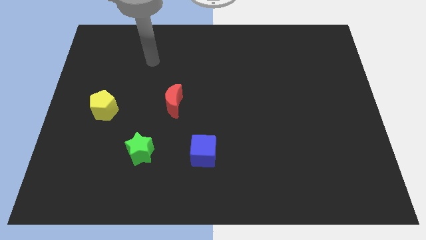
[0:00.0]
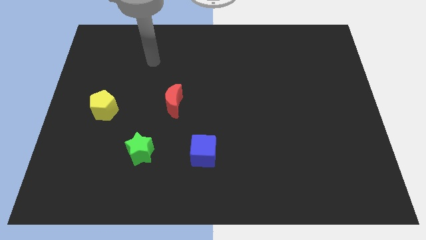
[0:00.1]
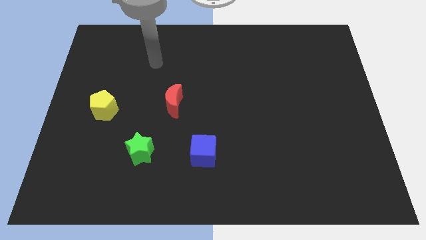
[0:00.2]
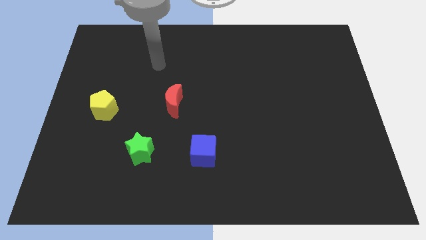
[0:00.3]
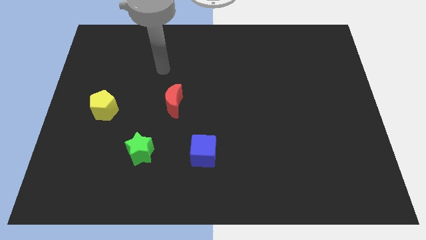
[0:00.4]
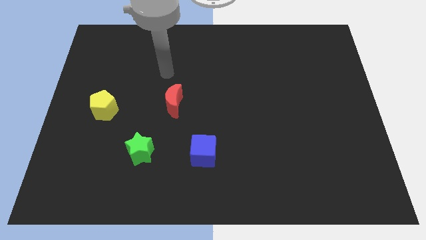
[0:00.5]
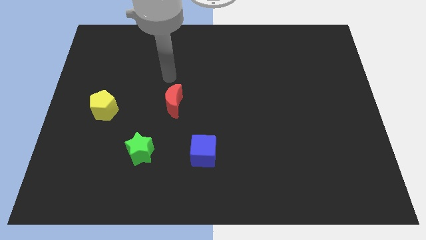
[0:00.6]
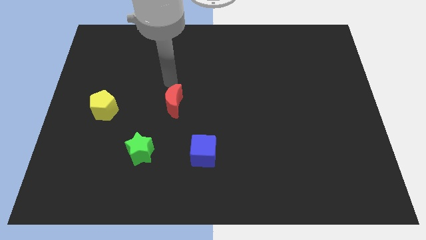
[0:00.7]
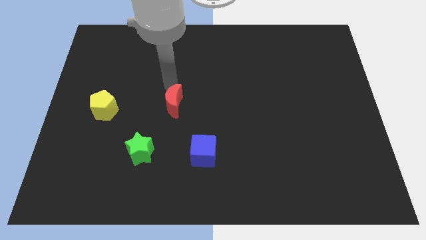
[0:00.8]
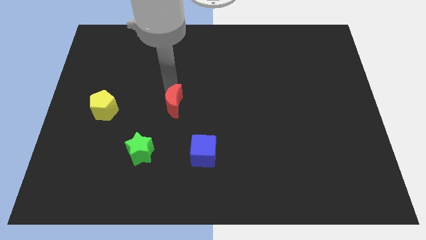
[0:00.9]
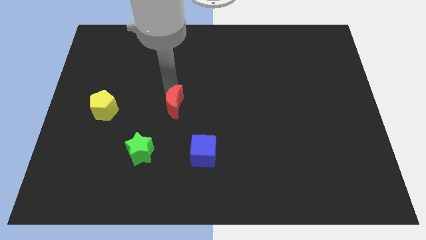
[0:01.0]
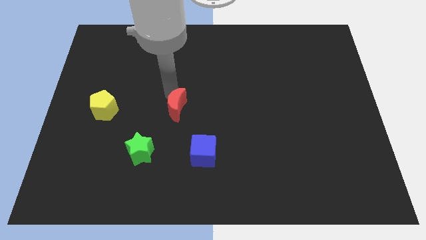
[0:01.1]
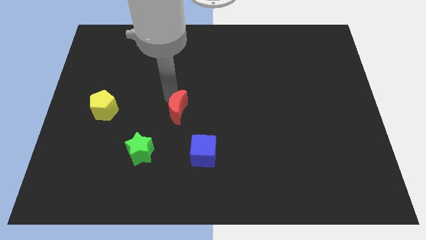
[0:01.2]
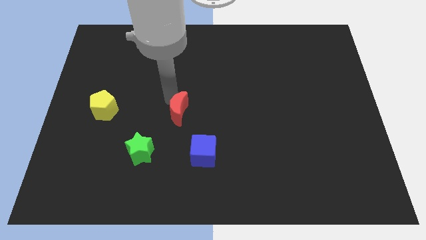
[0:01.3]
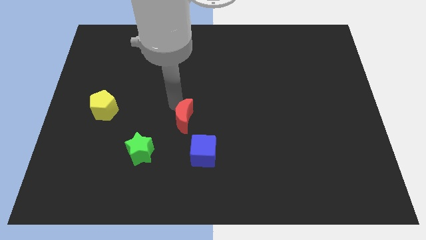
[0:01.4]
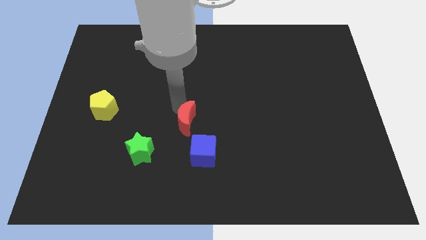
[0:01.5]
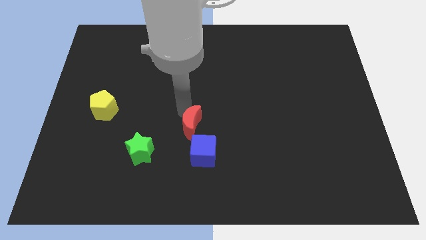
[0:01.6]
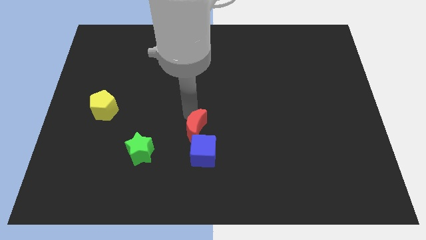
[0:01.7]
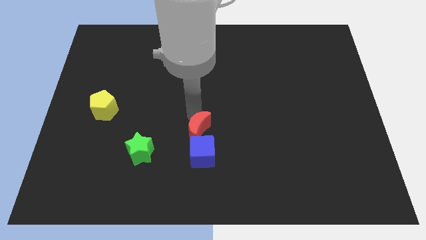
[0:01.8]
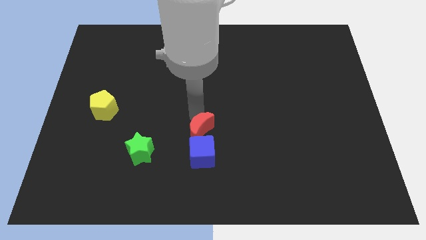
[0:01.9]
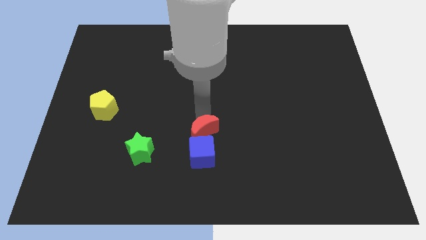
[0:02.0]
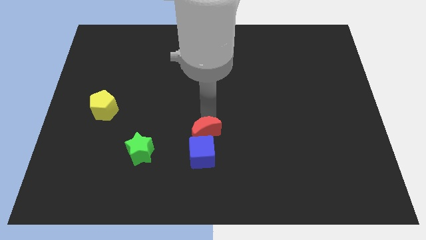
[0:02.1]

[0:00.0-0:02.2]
push the moon towards the cube

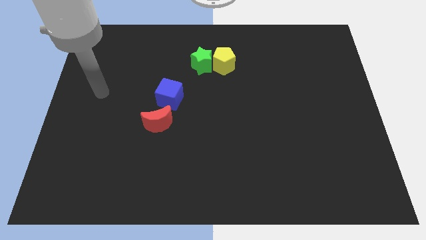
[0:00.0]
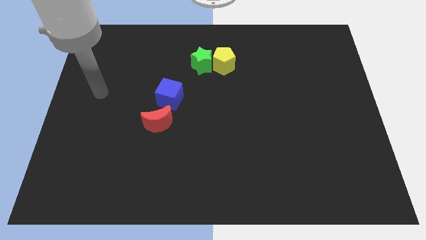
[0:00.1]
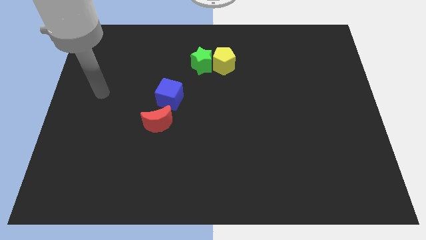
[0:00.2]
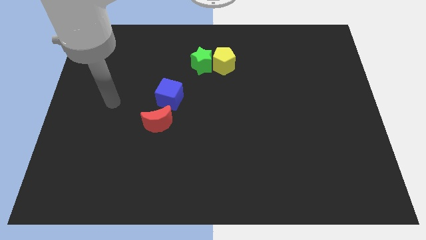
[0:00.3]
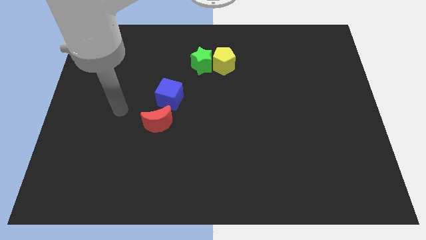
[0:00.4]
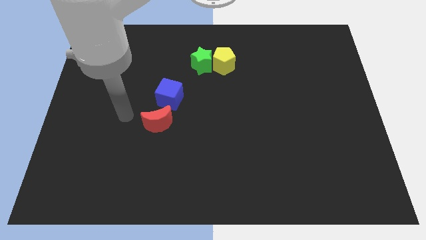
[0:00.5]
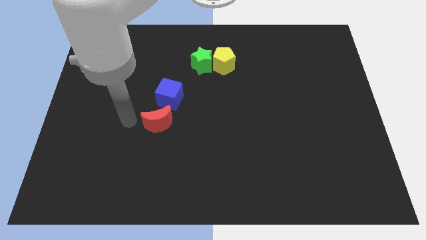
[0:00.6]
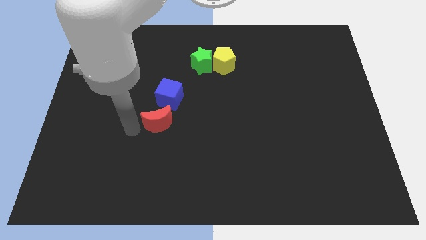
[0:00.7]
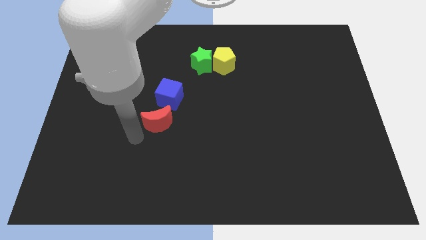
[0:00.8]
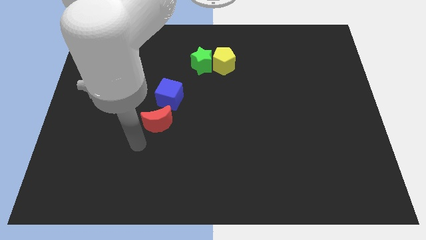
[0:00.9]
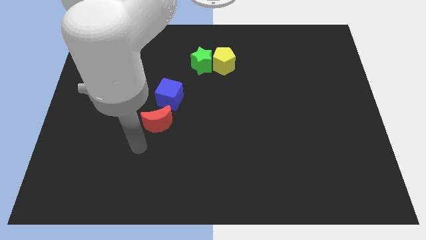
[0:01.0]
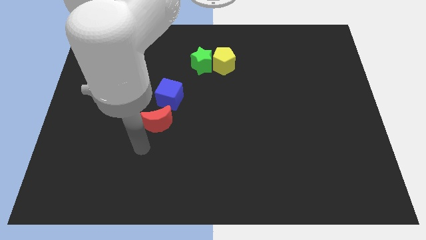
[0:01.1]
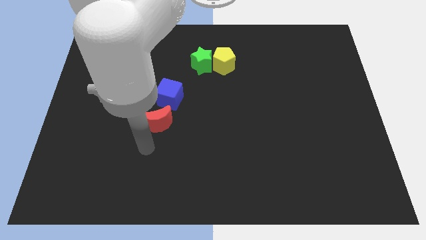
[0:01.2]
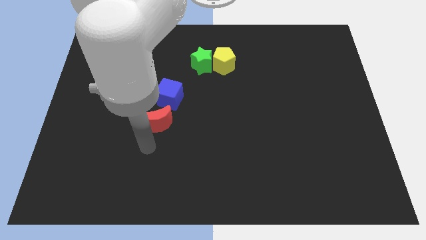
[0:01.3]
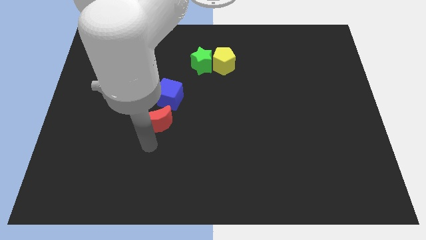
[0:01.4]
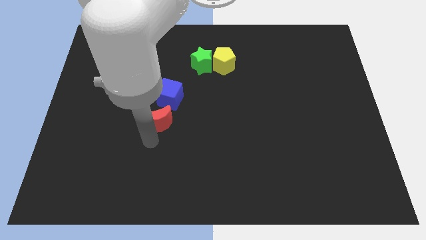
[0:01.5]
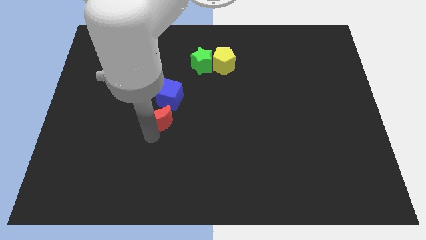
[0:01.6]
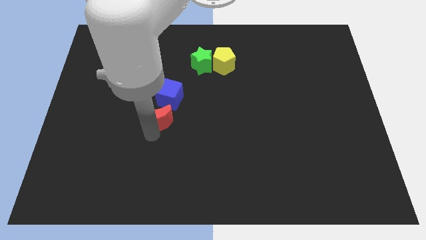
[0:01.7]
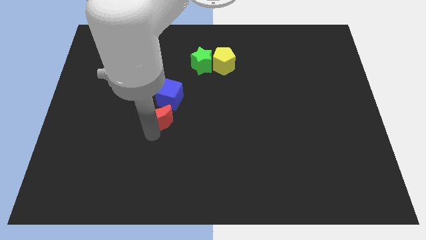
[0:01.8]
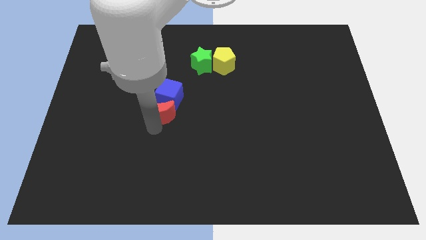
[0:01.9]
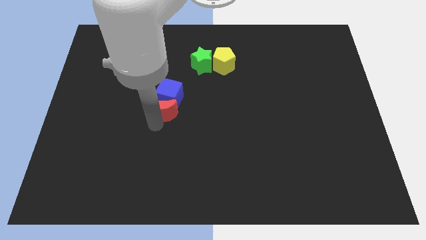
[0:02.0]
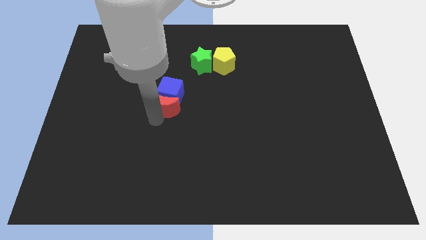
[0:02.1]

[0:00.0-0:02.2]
move the red moon next to the blue block

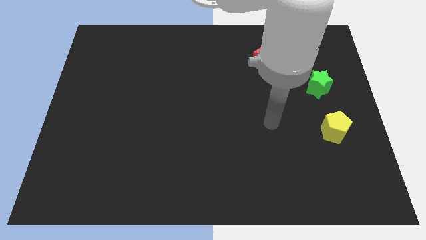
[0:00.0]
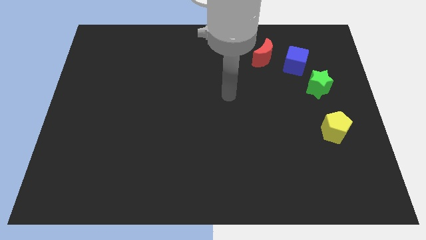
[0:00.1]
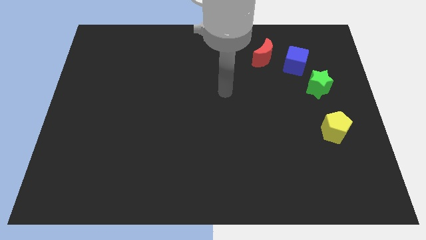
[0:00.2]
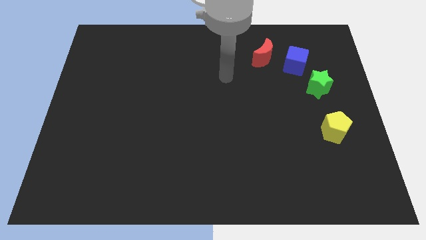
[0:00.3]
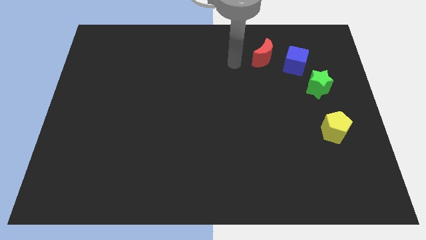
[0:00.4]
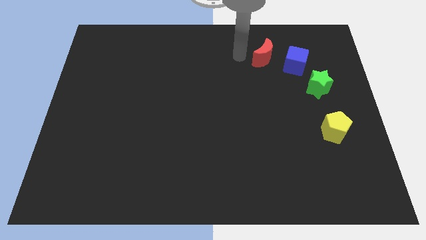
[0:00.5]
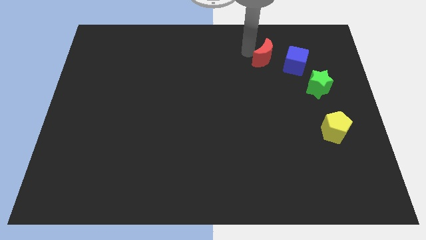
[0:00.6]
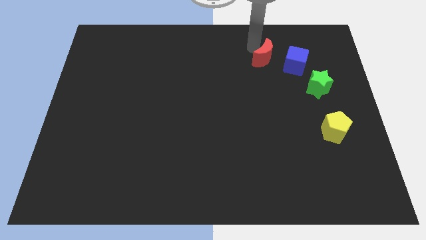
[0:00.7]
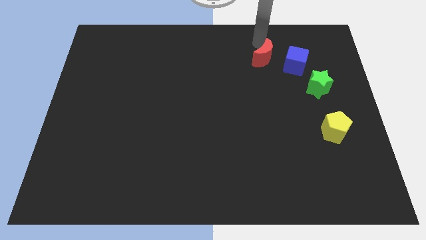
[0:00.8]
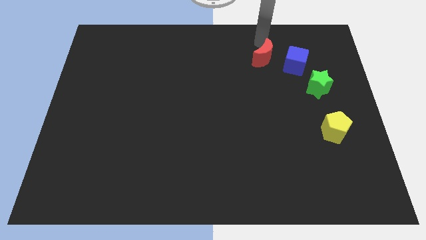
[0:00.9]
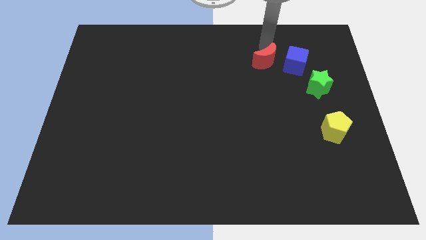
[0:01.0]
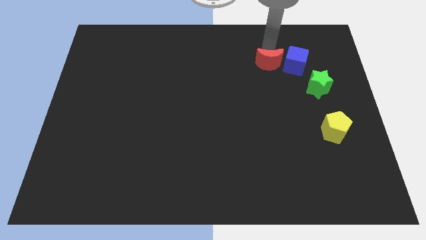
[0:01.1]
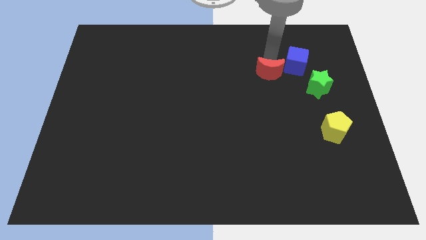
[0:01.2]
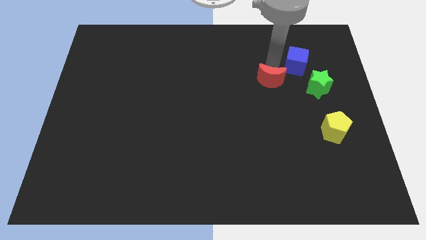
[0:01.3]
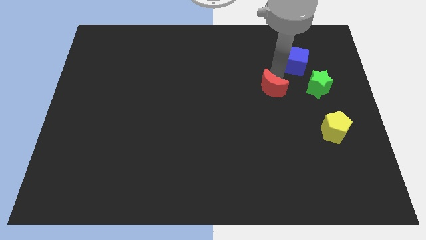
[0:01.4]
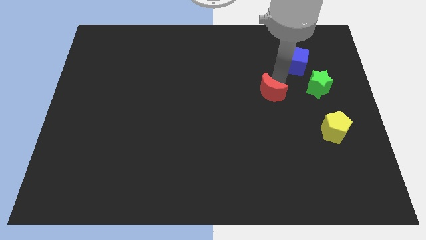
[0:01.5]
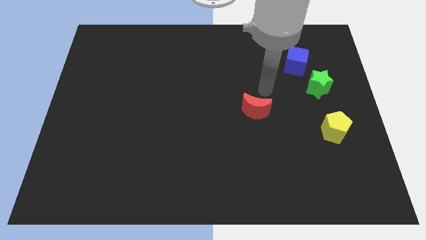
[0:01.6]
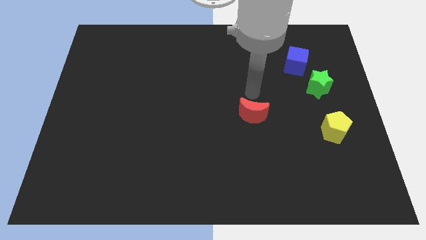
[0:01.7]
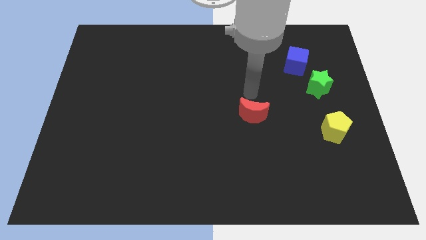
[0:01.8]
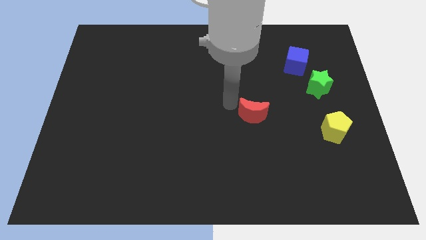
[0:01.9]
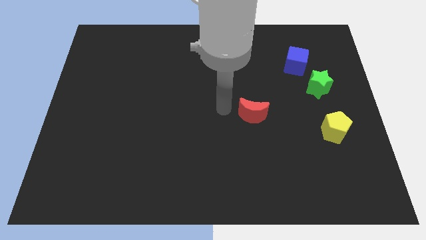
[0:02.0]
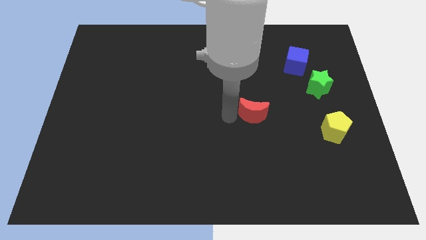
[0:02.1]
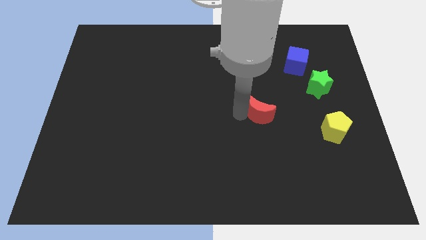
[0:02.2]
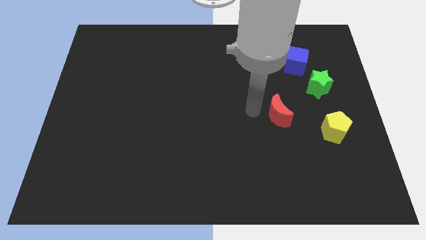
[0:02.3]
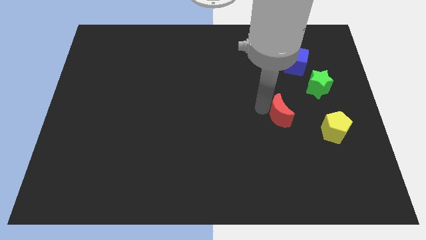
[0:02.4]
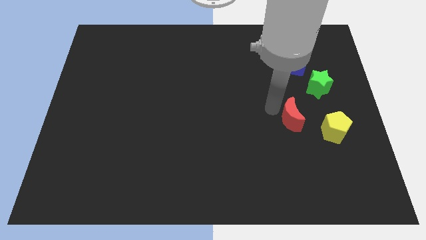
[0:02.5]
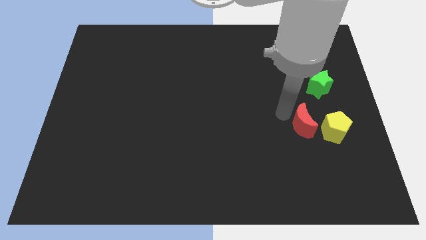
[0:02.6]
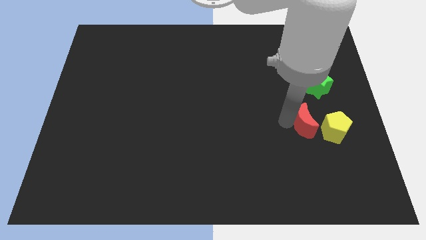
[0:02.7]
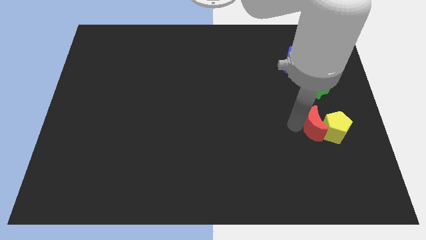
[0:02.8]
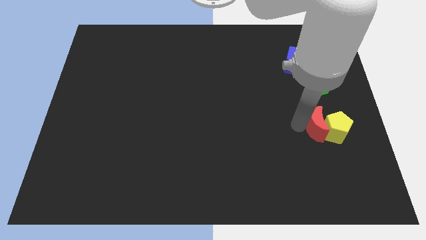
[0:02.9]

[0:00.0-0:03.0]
put the red moon close to the yellow block

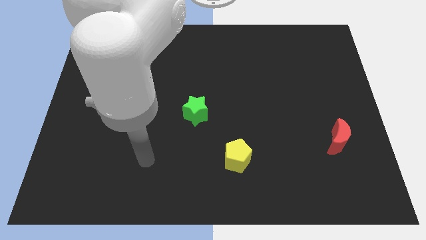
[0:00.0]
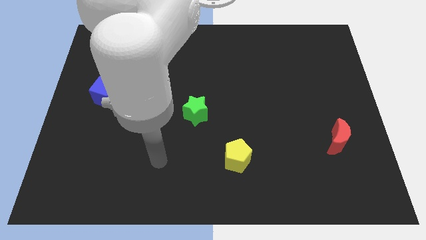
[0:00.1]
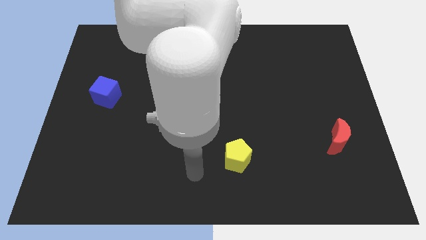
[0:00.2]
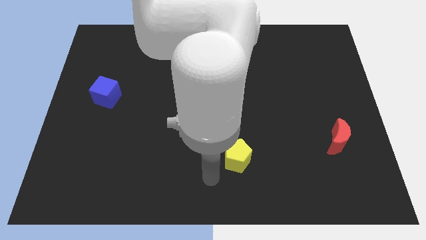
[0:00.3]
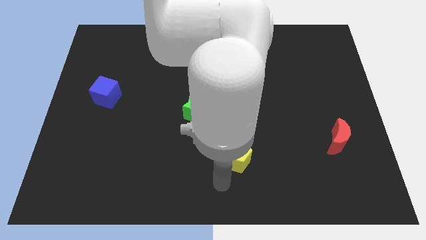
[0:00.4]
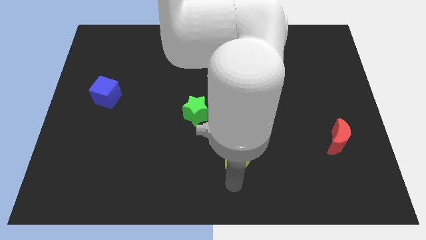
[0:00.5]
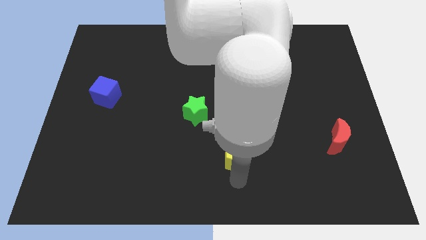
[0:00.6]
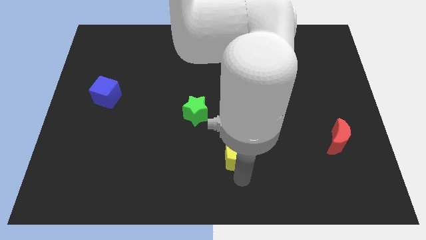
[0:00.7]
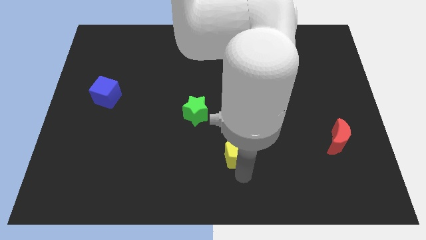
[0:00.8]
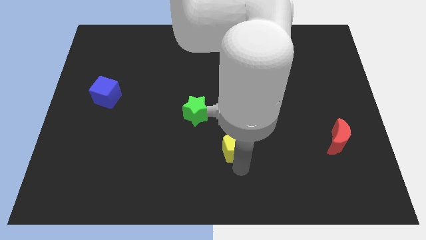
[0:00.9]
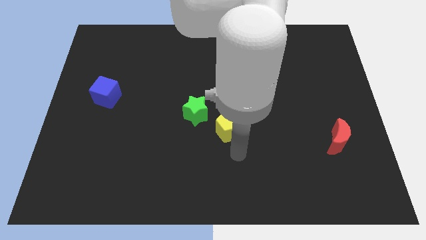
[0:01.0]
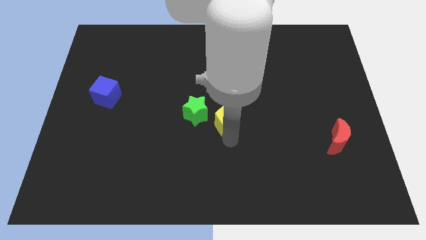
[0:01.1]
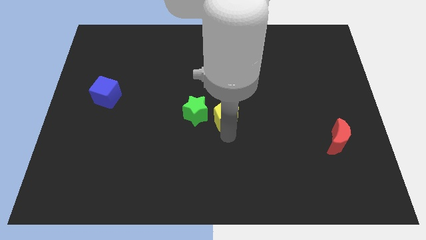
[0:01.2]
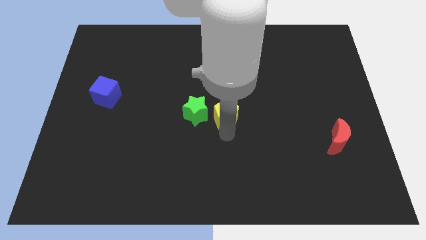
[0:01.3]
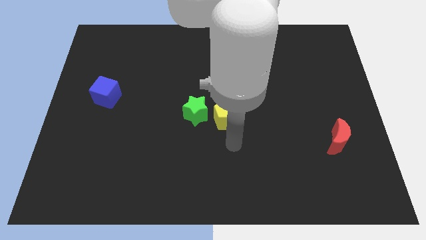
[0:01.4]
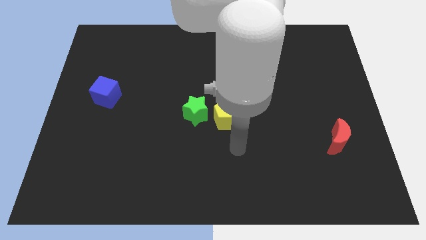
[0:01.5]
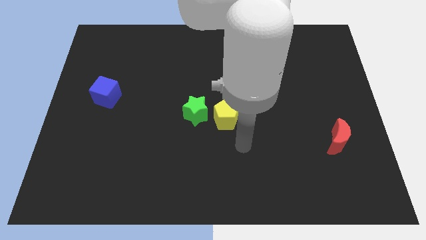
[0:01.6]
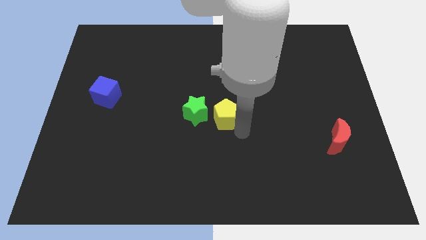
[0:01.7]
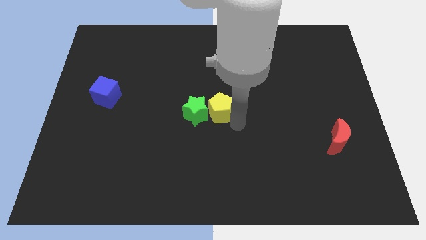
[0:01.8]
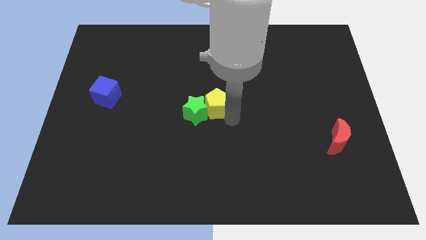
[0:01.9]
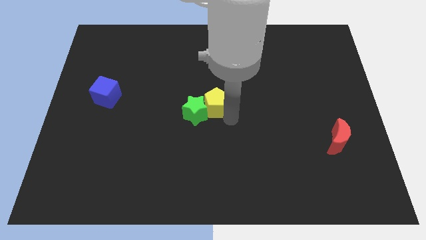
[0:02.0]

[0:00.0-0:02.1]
move the yellow block close to the green star
